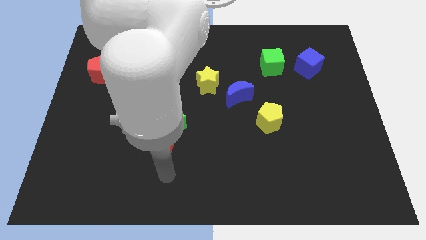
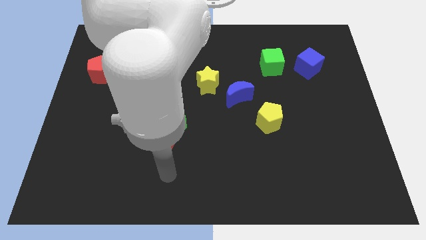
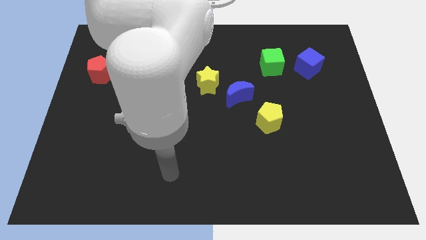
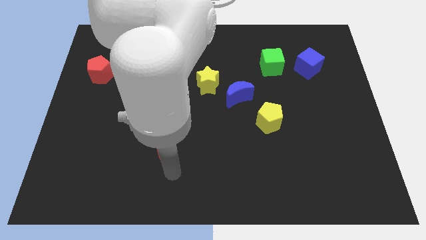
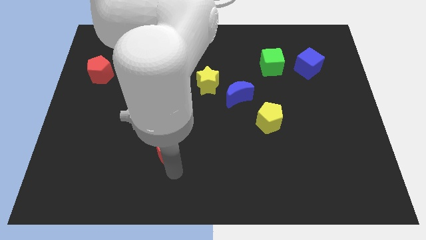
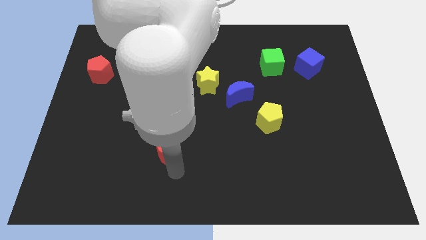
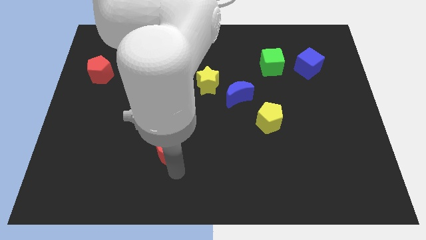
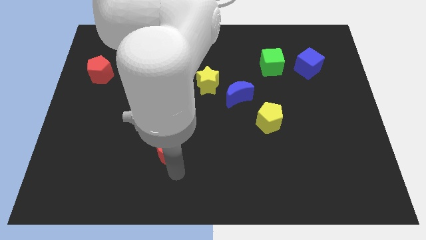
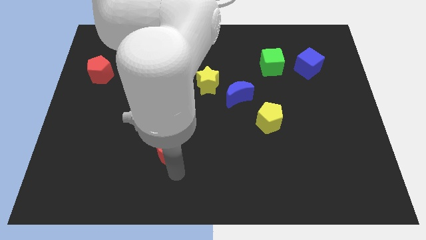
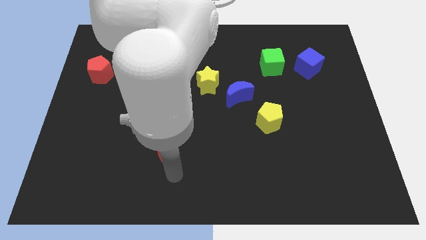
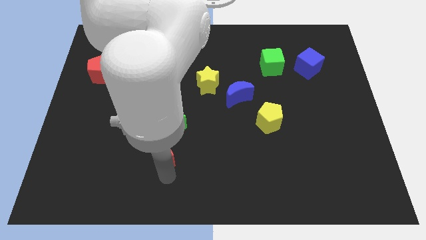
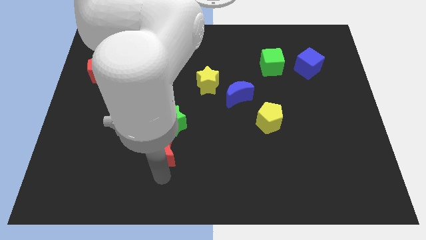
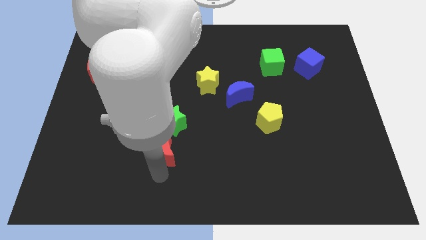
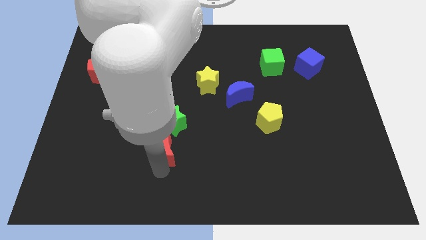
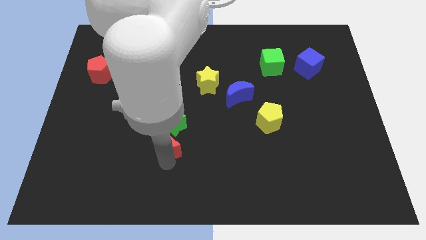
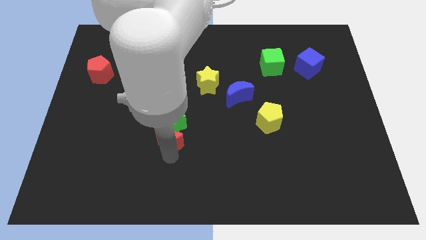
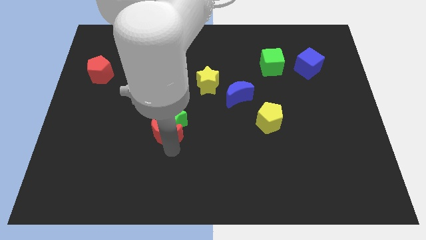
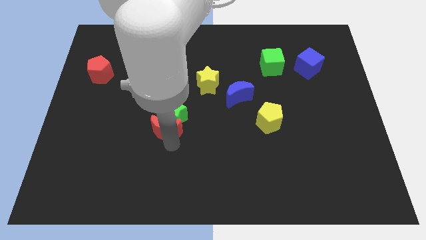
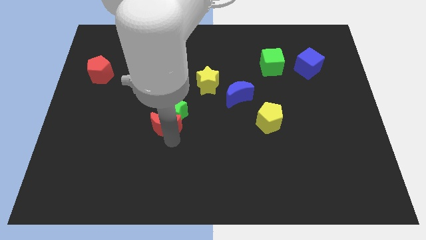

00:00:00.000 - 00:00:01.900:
push the red crescent into the green star

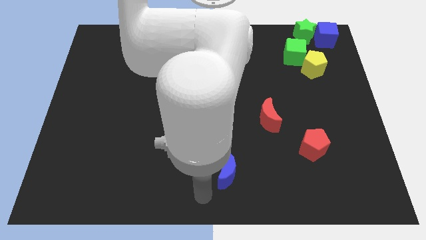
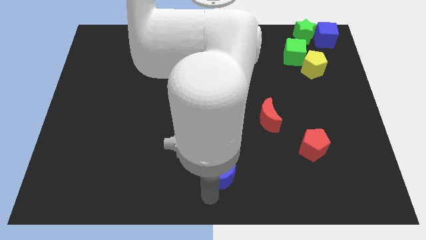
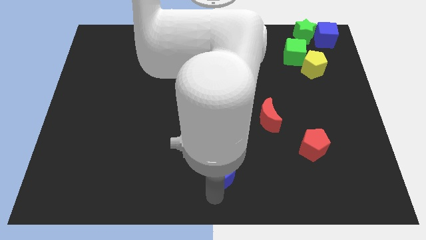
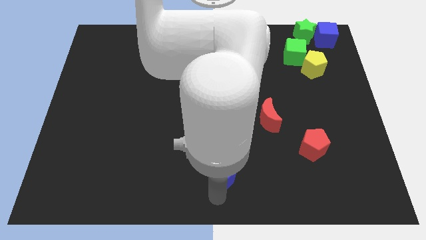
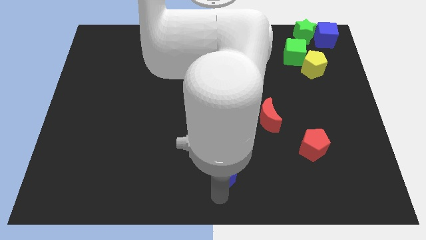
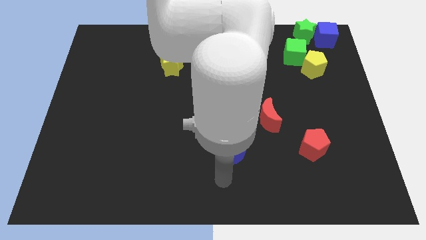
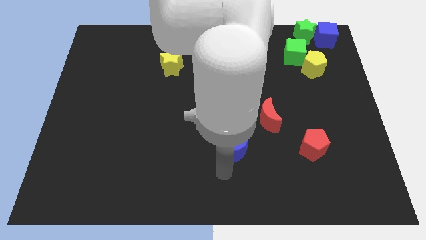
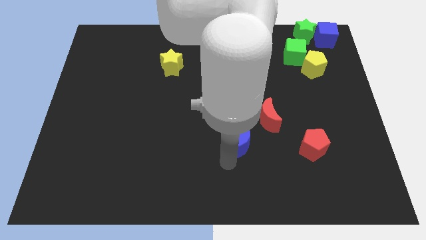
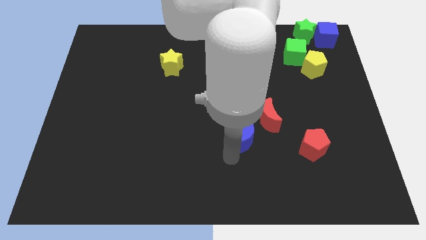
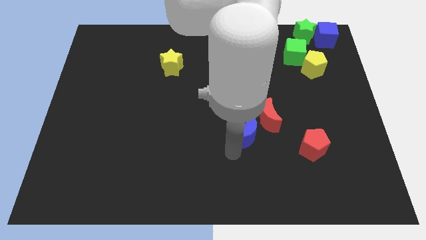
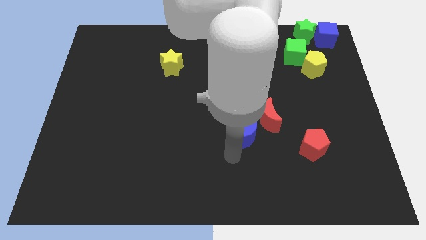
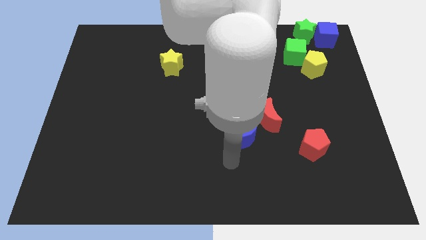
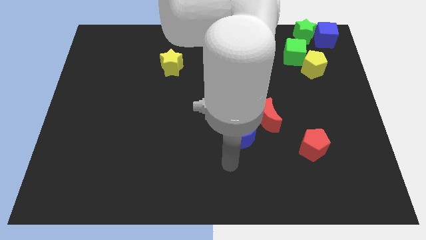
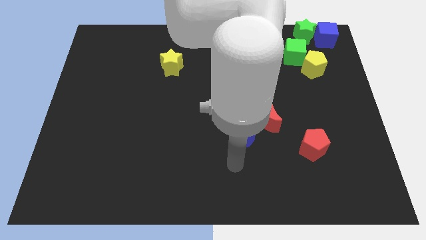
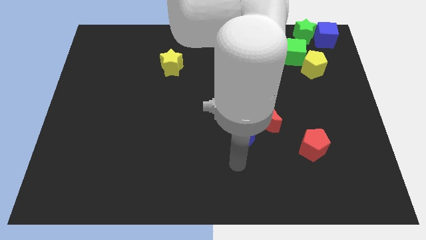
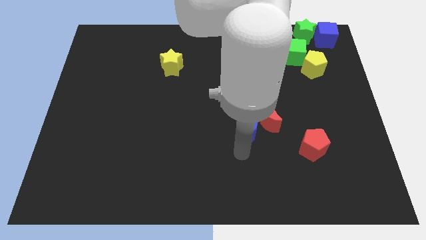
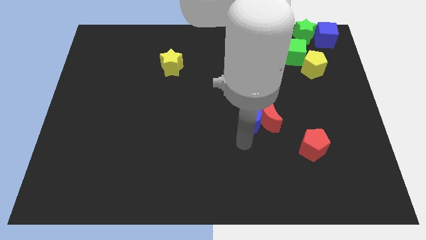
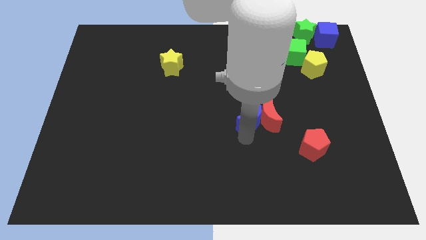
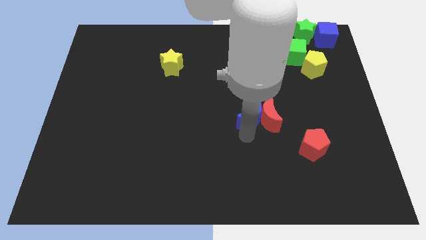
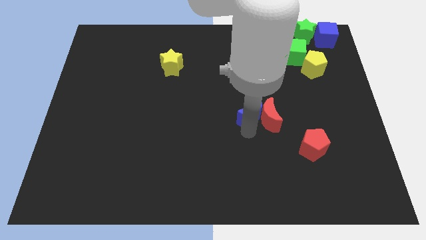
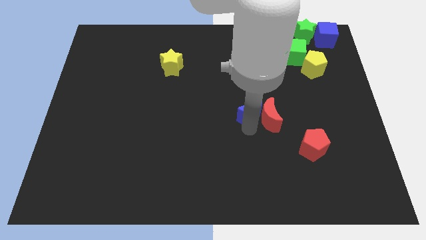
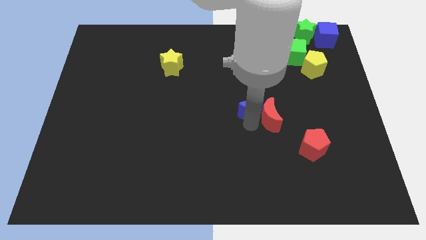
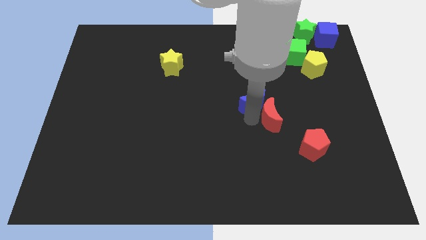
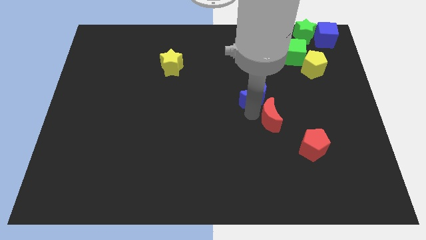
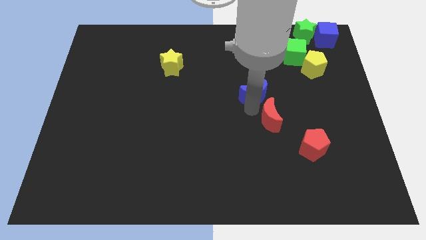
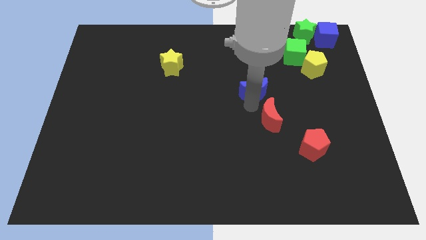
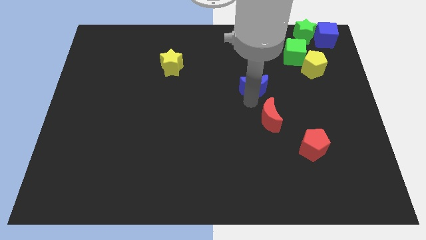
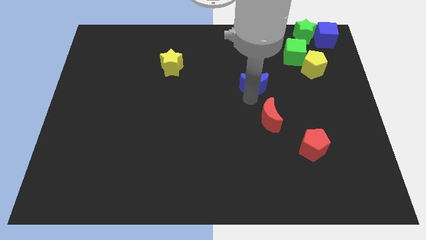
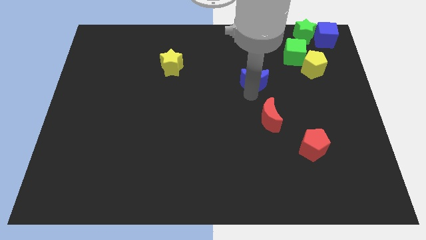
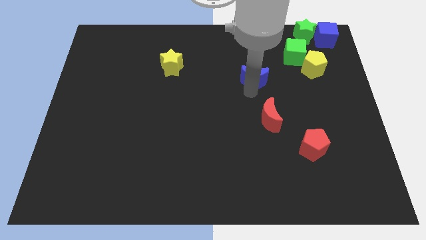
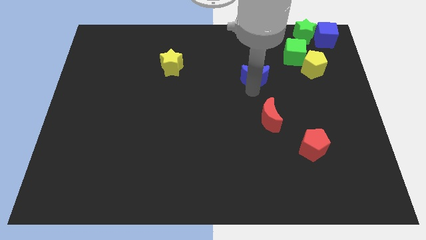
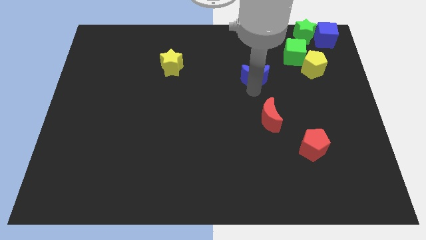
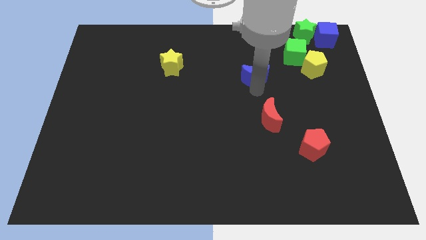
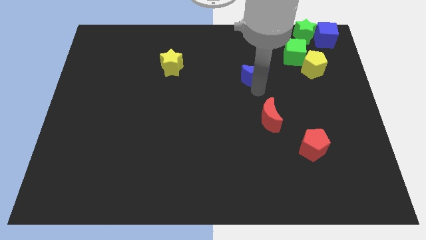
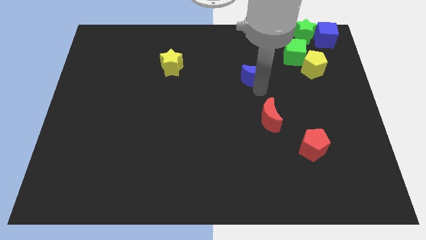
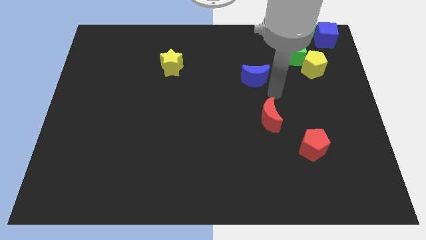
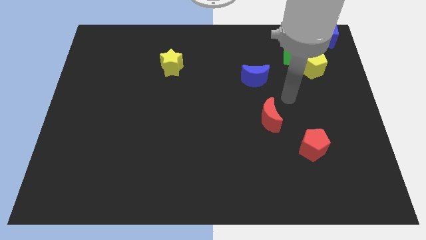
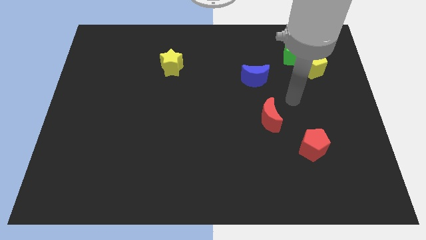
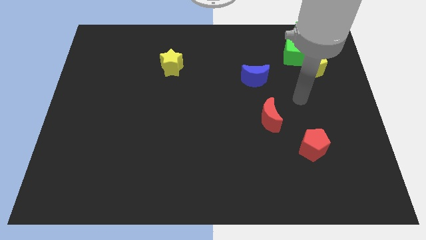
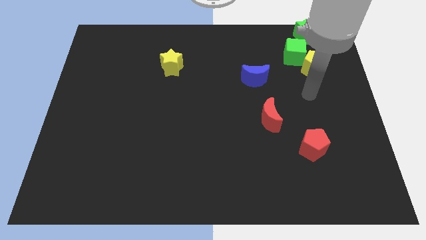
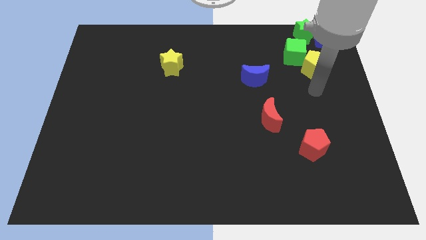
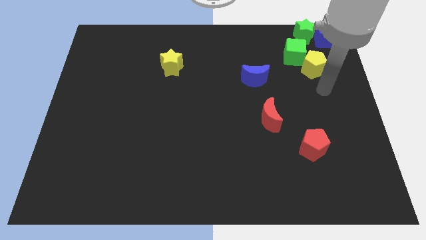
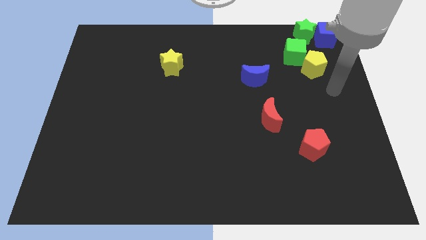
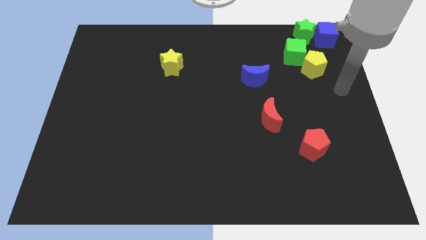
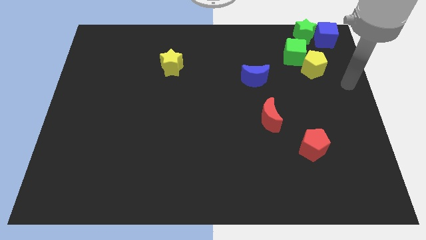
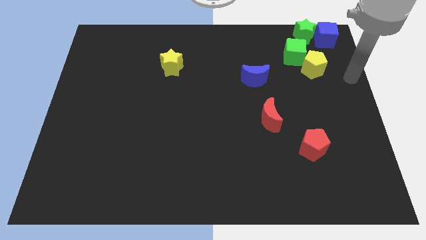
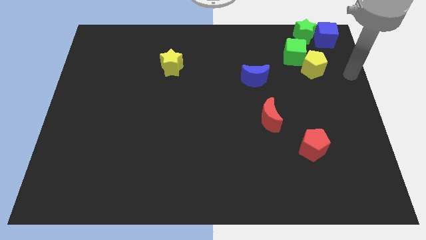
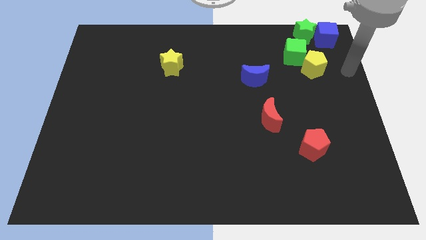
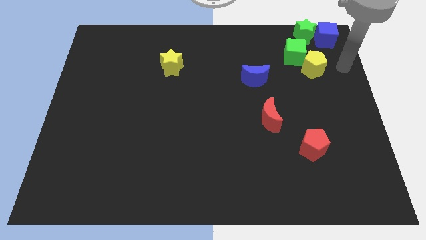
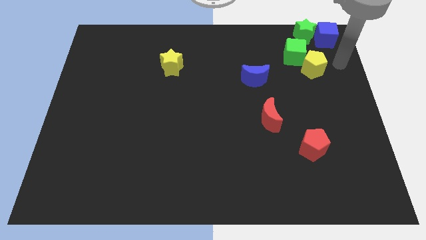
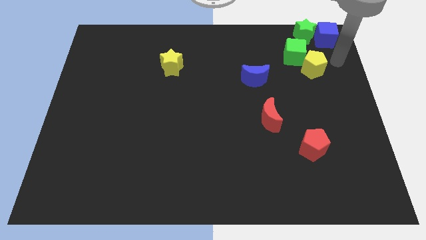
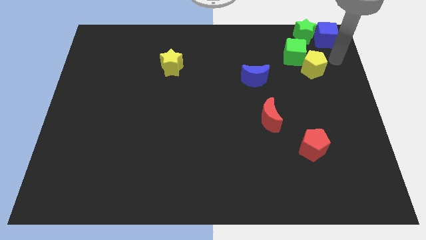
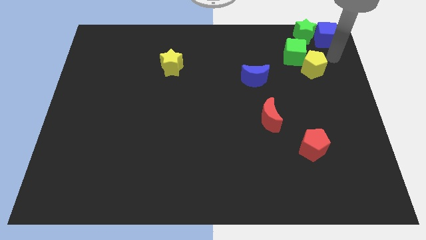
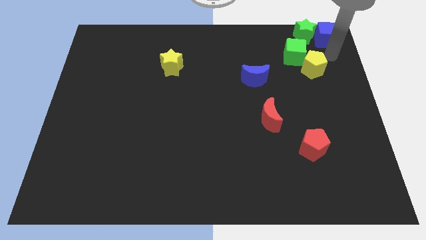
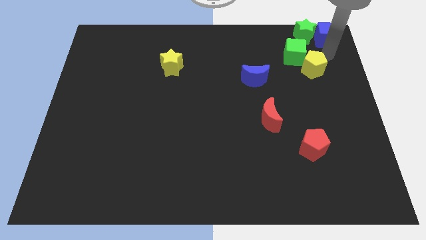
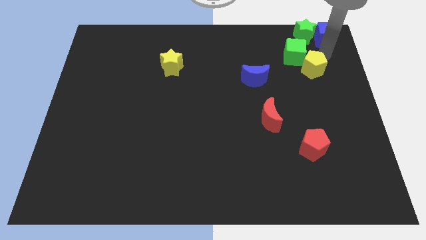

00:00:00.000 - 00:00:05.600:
move the blue moon diagonally below the green cube

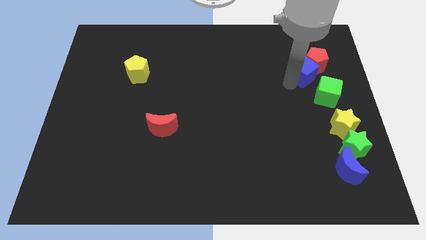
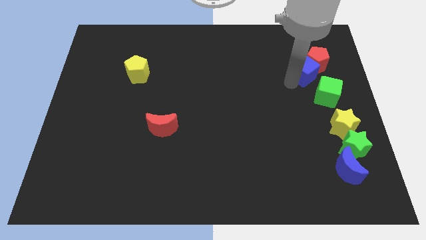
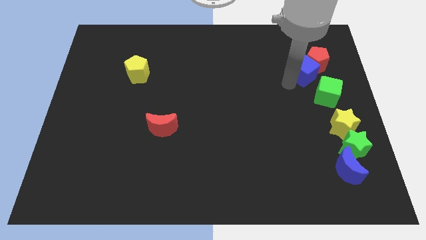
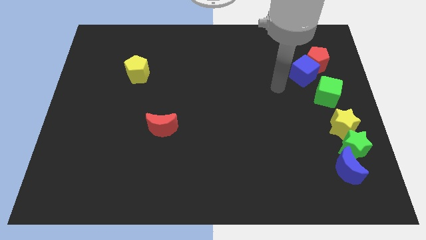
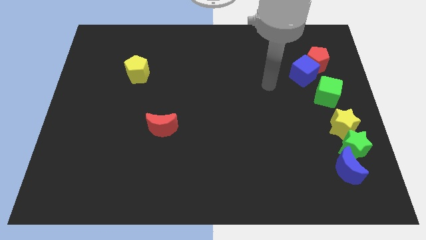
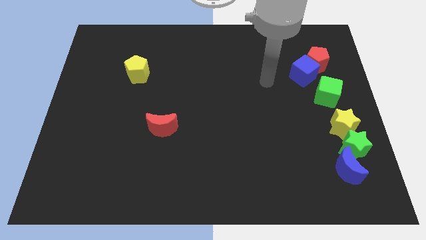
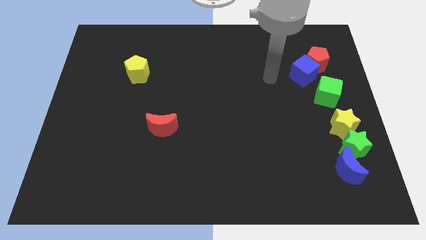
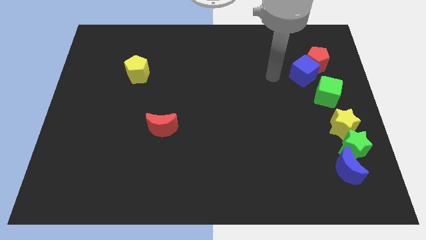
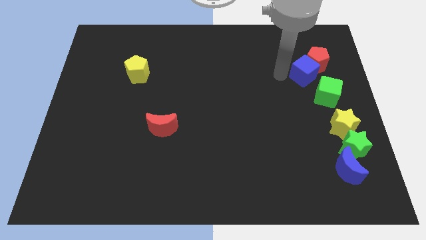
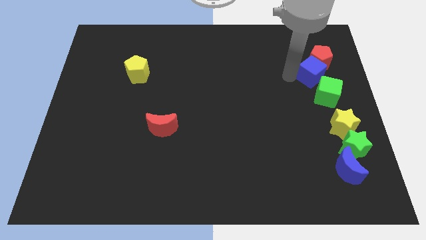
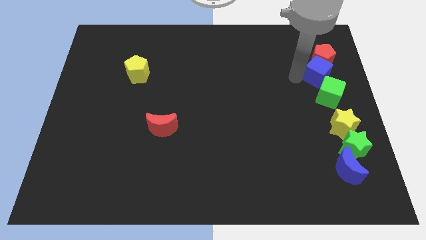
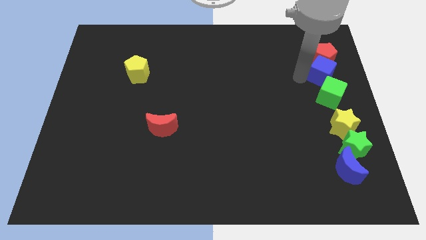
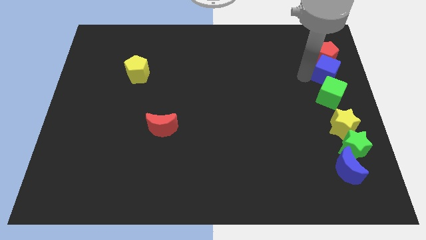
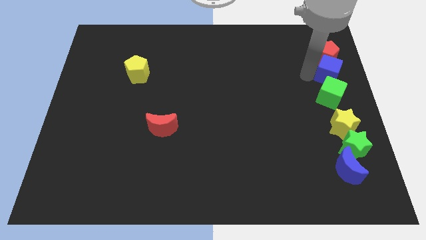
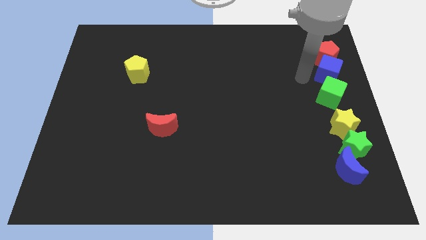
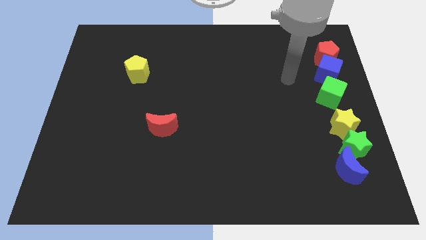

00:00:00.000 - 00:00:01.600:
slide the red pentagon to the top of the blue cube to form a vertical line
